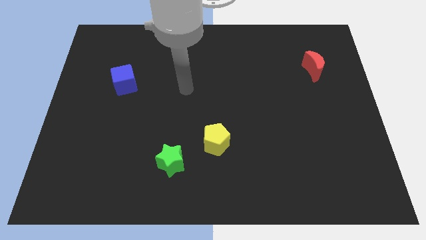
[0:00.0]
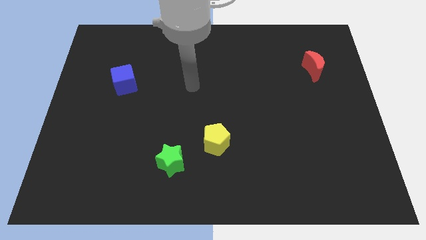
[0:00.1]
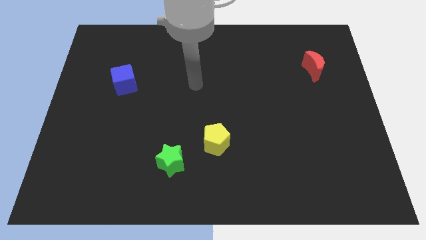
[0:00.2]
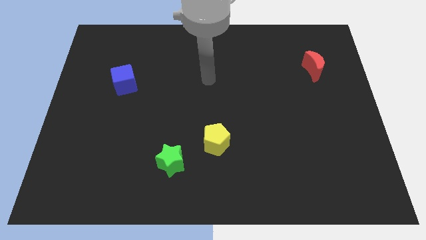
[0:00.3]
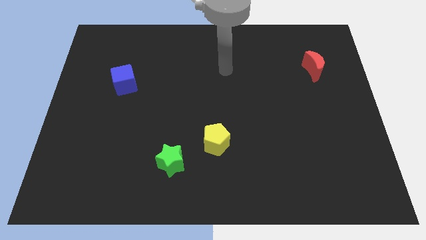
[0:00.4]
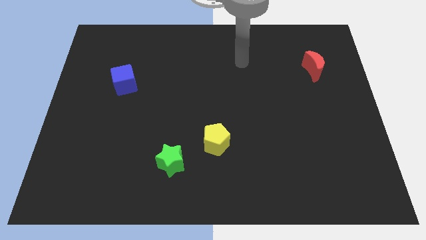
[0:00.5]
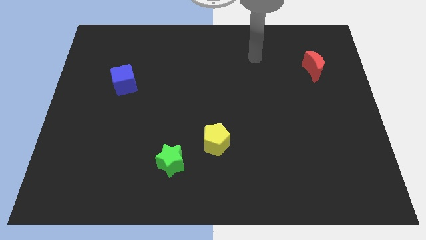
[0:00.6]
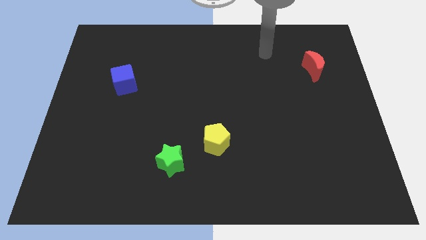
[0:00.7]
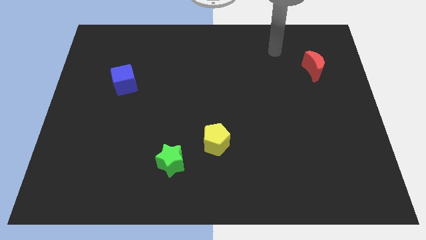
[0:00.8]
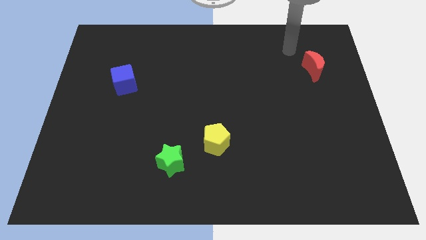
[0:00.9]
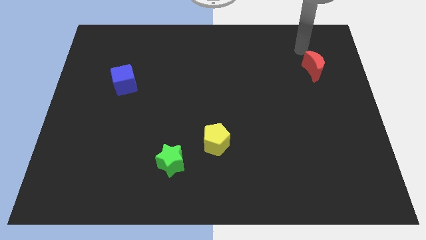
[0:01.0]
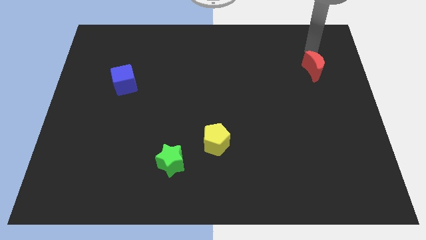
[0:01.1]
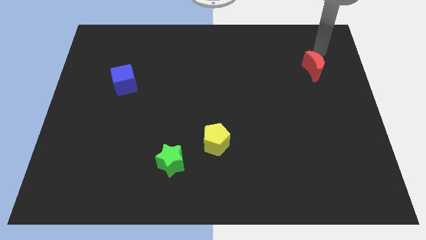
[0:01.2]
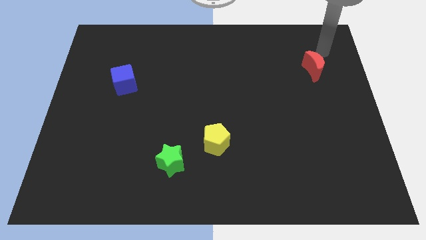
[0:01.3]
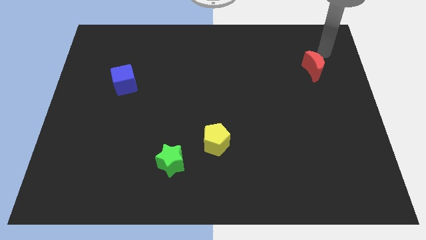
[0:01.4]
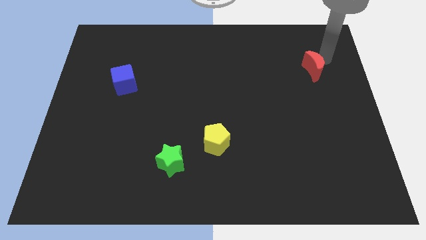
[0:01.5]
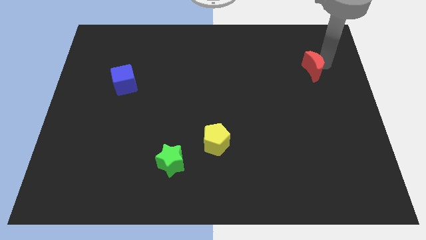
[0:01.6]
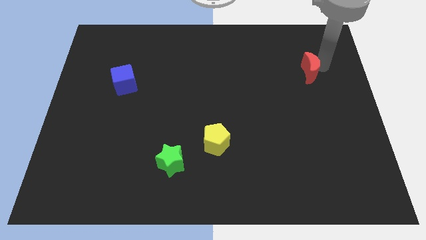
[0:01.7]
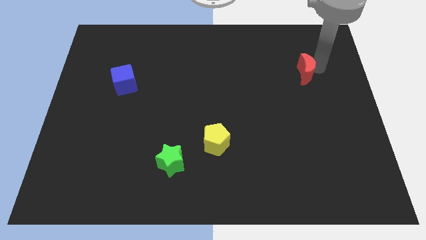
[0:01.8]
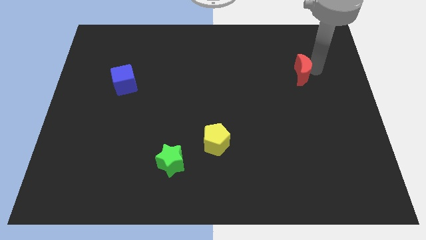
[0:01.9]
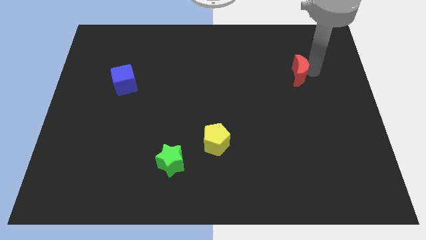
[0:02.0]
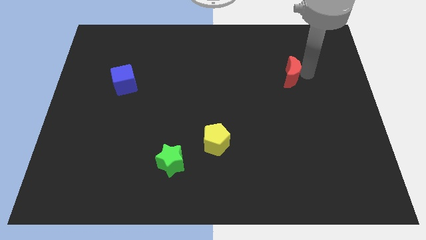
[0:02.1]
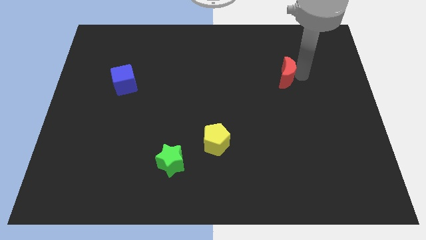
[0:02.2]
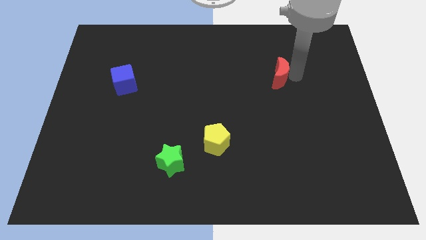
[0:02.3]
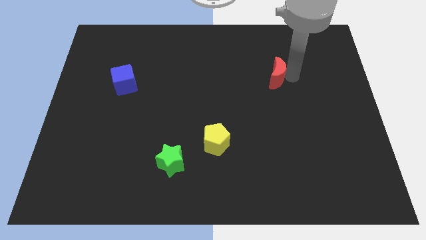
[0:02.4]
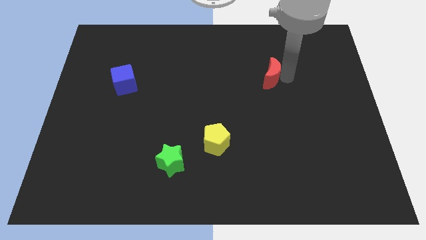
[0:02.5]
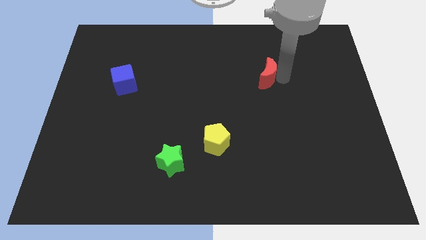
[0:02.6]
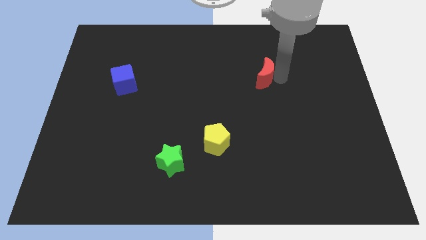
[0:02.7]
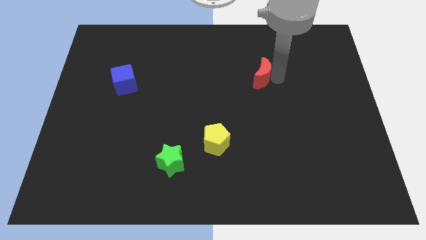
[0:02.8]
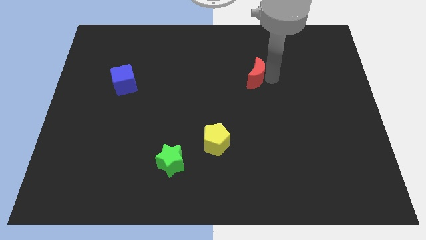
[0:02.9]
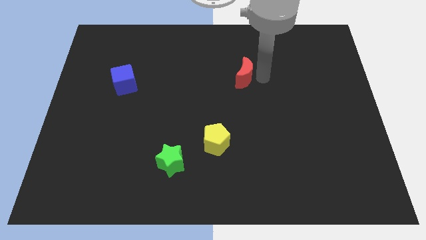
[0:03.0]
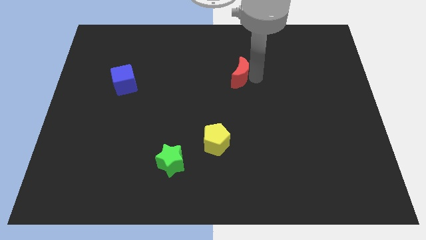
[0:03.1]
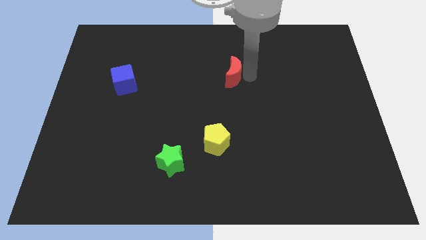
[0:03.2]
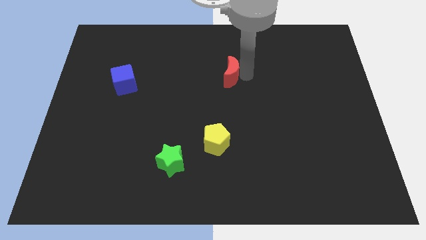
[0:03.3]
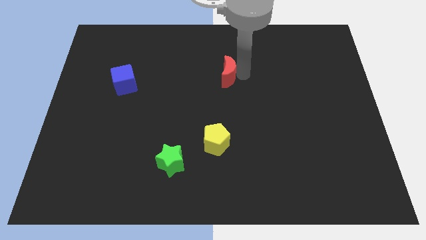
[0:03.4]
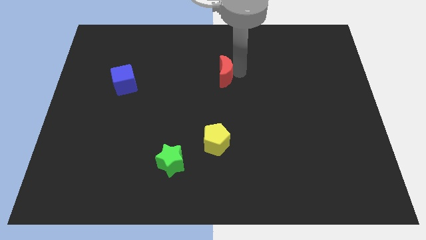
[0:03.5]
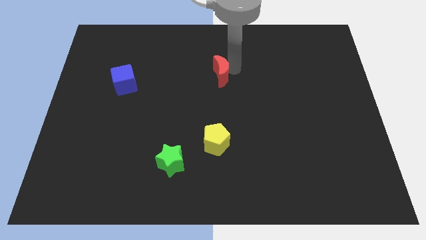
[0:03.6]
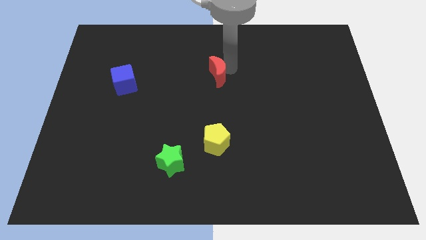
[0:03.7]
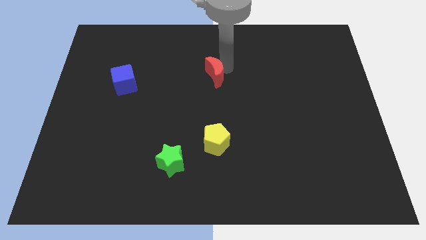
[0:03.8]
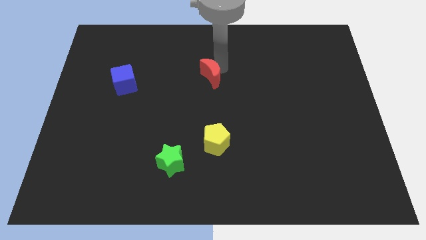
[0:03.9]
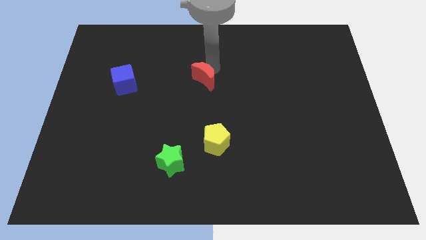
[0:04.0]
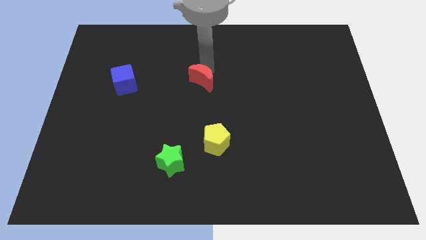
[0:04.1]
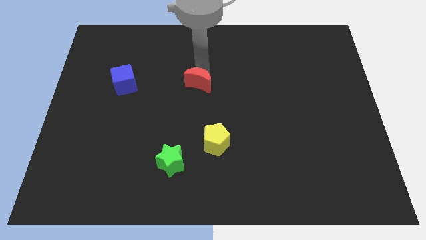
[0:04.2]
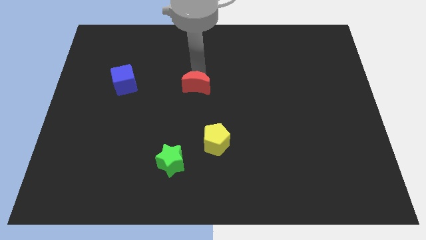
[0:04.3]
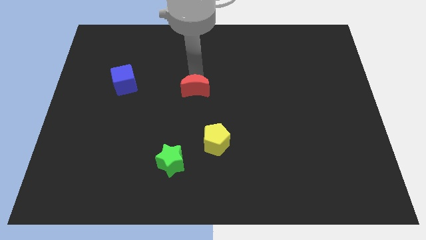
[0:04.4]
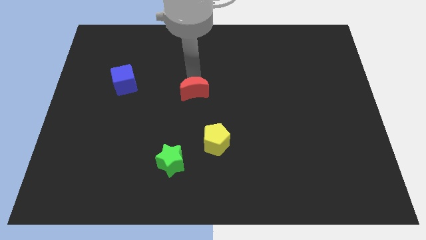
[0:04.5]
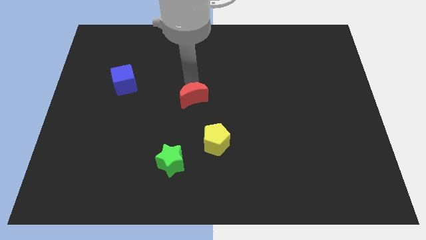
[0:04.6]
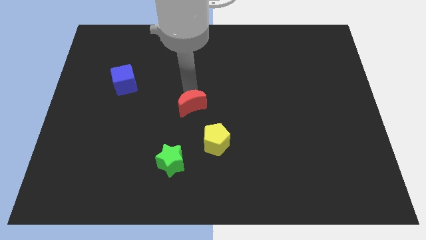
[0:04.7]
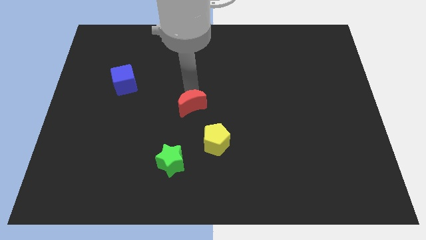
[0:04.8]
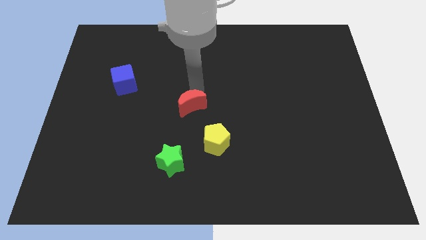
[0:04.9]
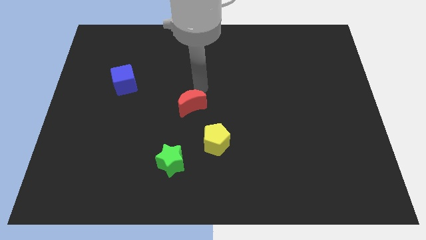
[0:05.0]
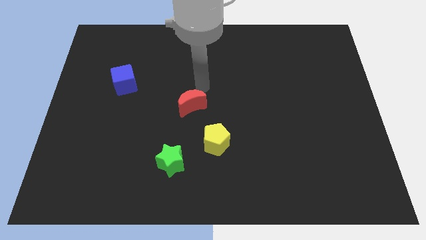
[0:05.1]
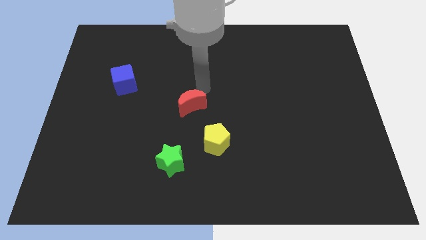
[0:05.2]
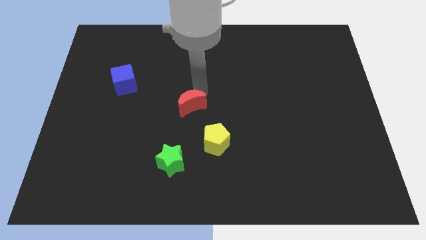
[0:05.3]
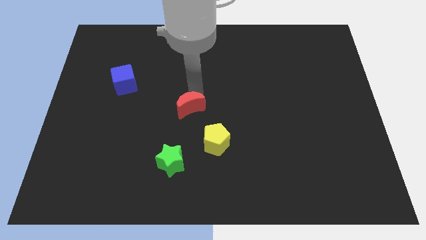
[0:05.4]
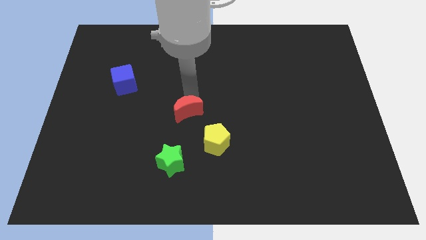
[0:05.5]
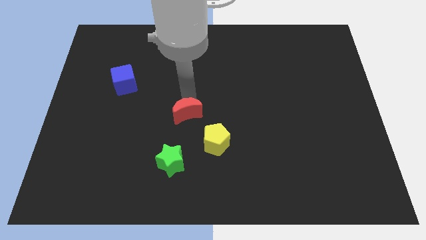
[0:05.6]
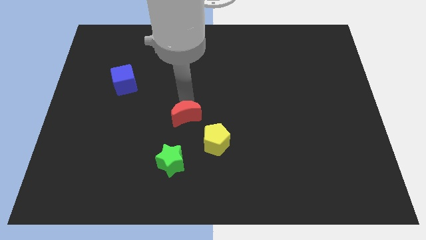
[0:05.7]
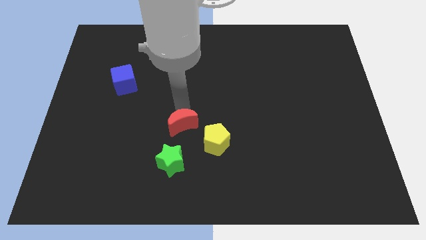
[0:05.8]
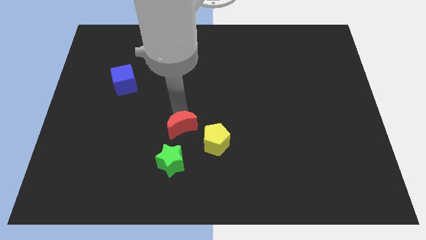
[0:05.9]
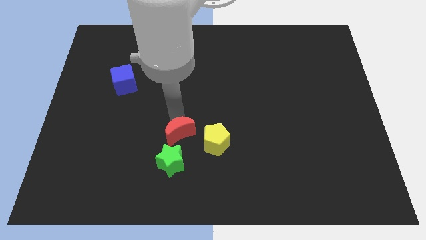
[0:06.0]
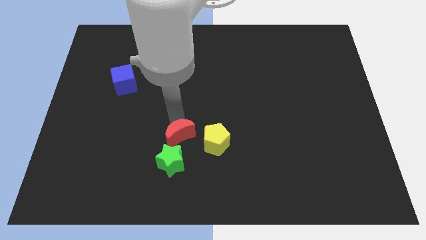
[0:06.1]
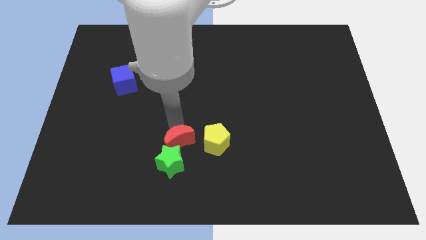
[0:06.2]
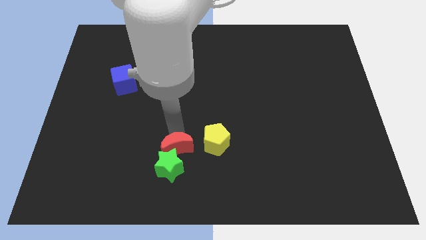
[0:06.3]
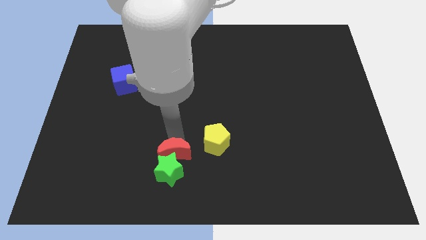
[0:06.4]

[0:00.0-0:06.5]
put the moon next to the star

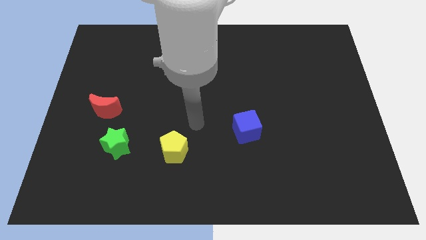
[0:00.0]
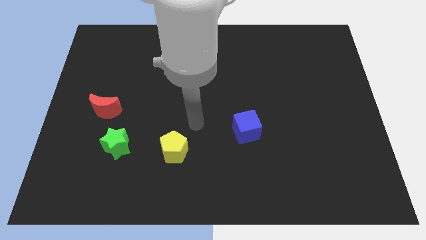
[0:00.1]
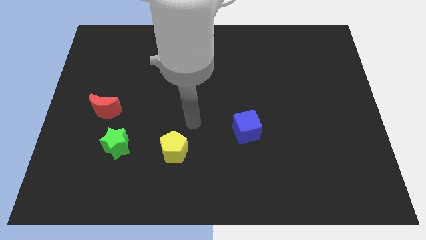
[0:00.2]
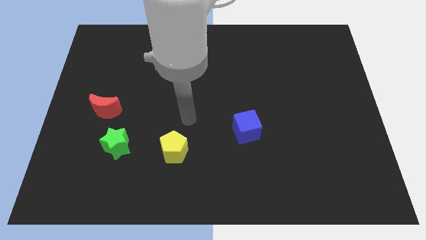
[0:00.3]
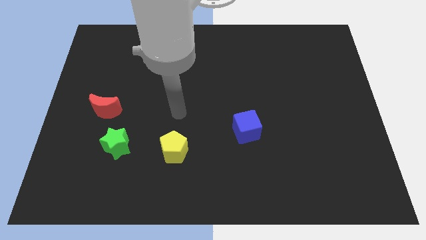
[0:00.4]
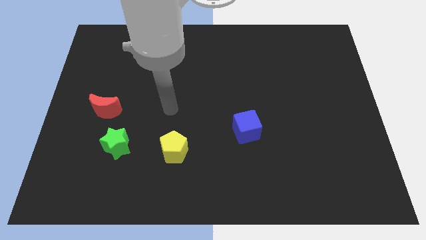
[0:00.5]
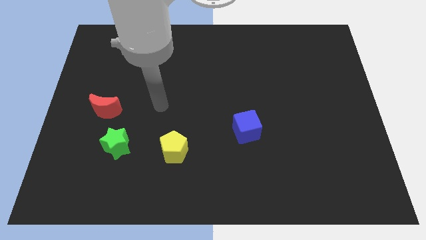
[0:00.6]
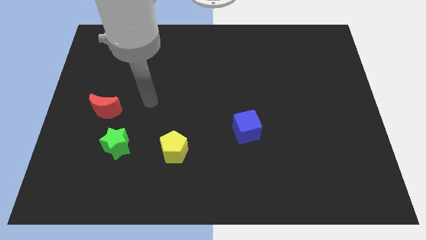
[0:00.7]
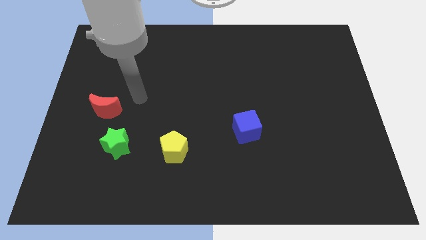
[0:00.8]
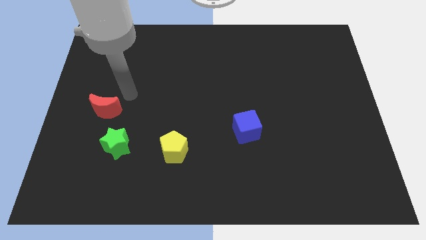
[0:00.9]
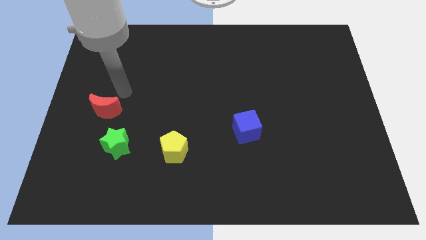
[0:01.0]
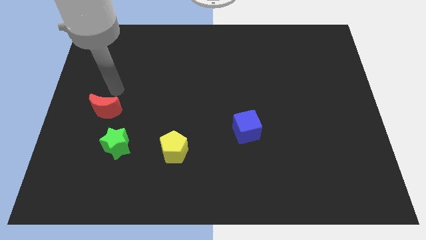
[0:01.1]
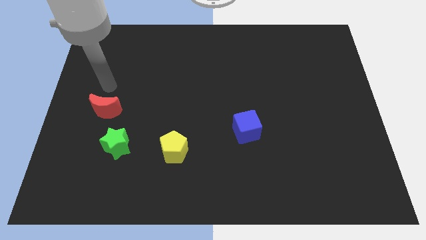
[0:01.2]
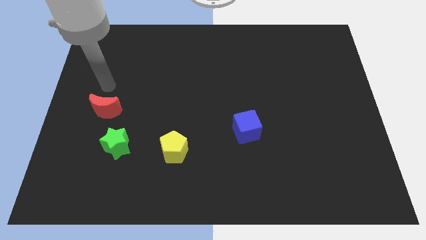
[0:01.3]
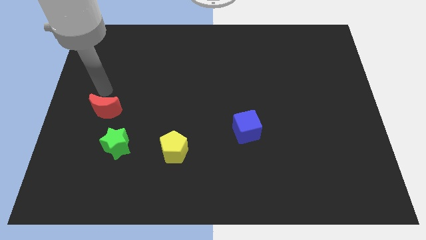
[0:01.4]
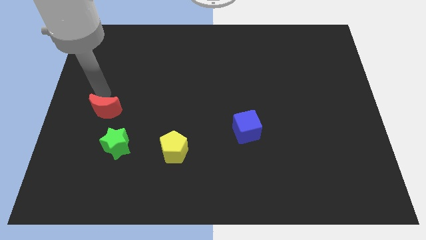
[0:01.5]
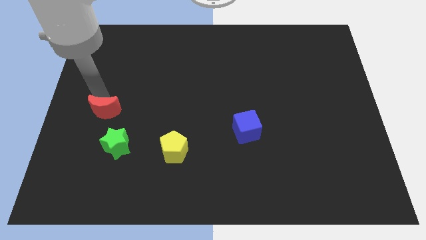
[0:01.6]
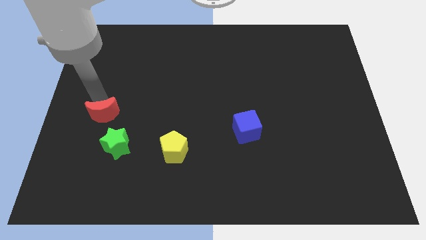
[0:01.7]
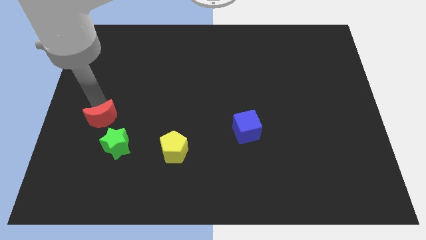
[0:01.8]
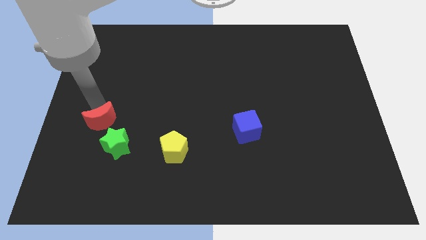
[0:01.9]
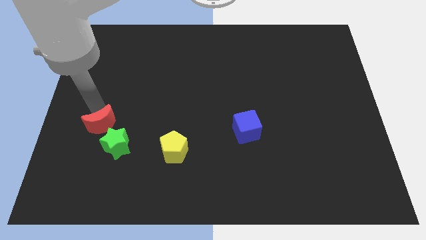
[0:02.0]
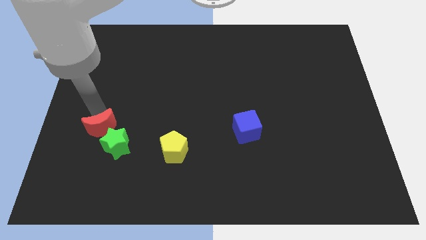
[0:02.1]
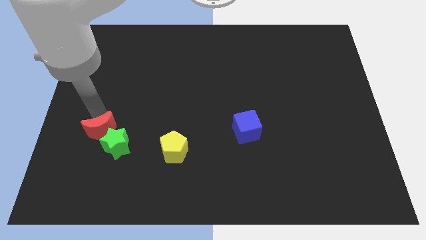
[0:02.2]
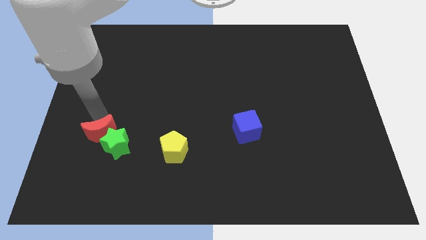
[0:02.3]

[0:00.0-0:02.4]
move the red block next to the star
